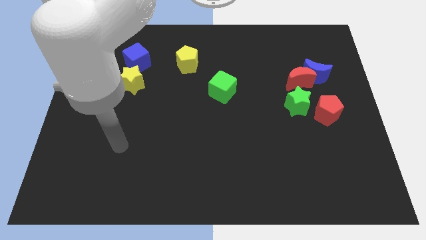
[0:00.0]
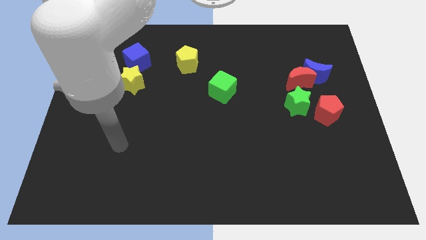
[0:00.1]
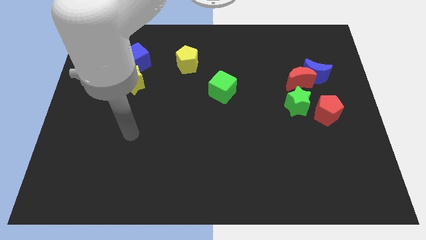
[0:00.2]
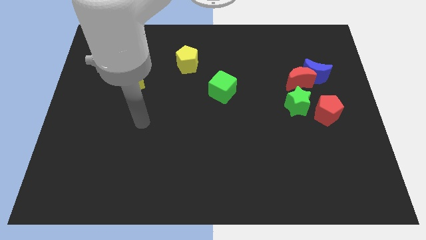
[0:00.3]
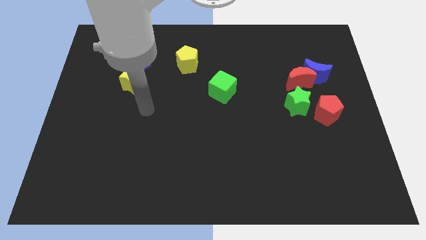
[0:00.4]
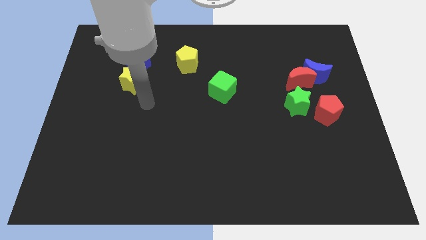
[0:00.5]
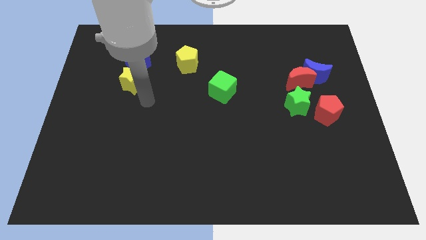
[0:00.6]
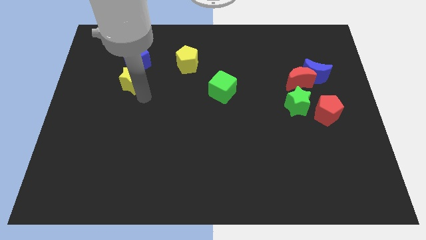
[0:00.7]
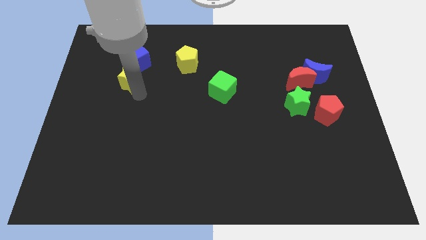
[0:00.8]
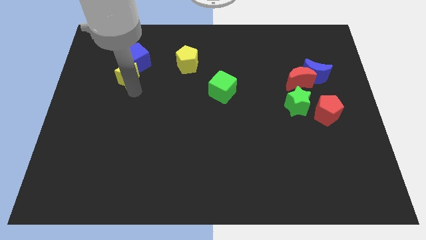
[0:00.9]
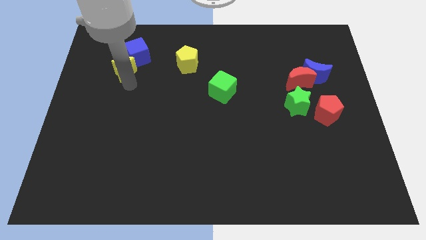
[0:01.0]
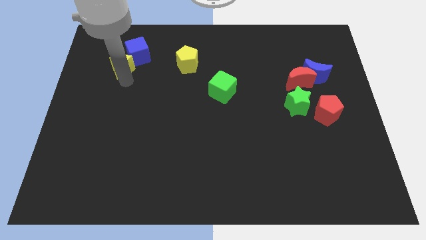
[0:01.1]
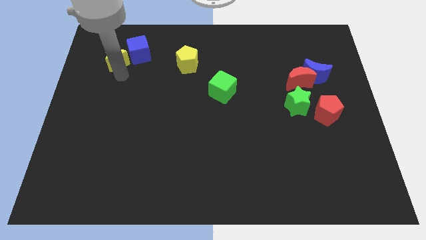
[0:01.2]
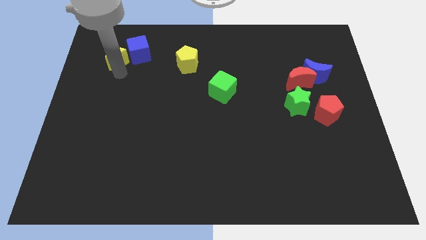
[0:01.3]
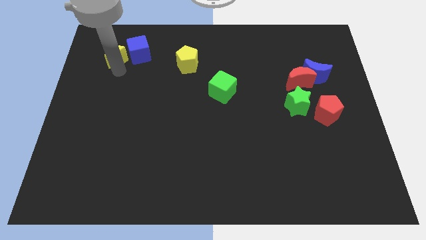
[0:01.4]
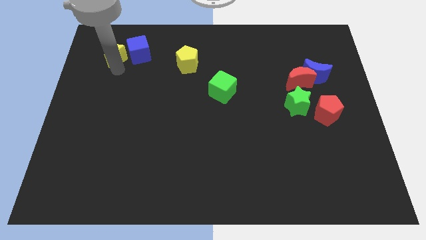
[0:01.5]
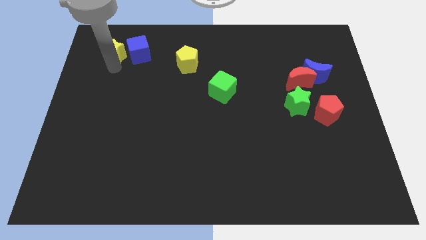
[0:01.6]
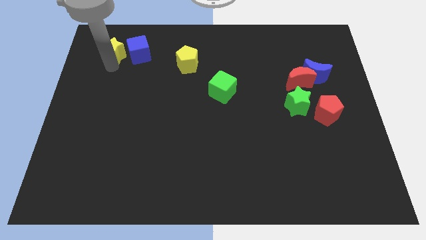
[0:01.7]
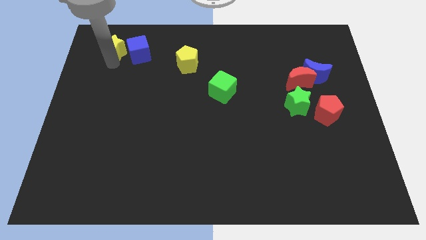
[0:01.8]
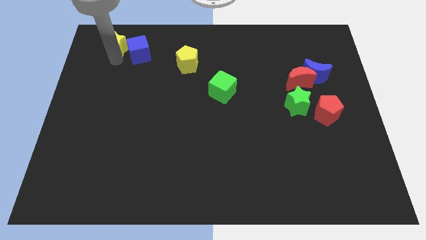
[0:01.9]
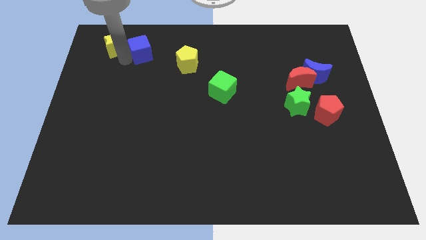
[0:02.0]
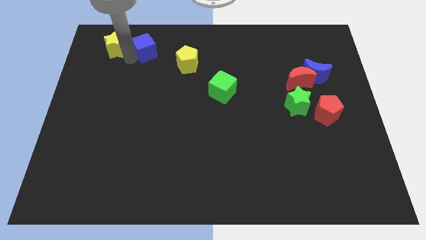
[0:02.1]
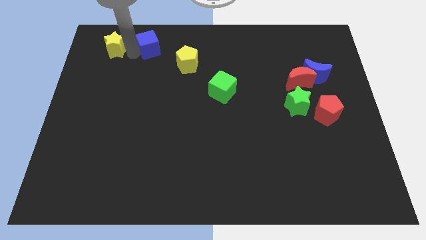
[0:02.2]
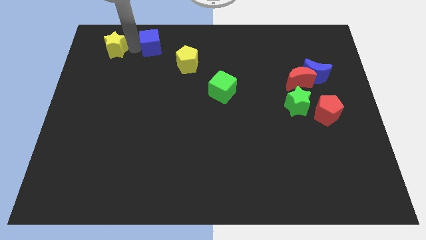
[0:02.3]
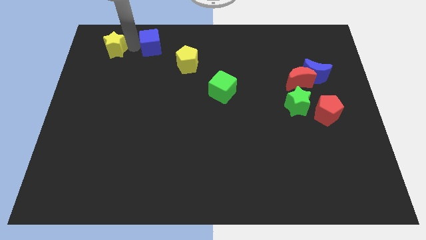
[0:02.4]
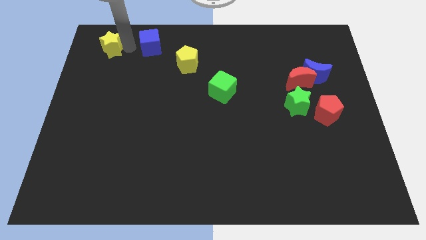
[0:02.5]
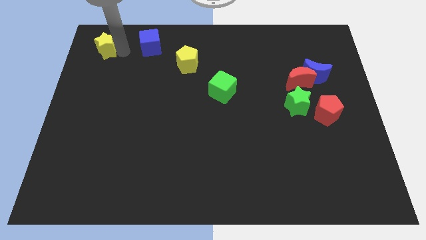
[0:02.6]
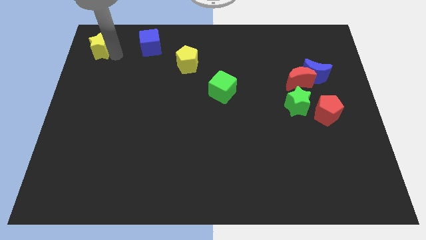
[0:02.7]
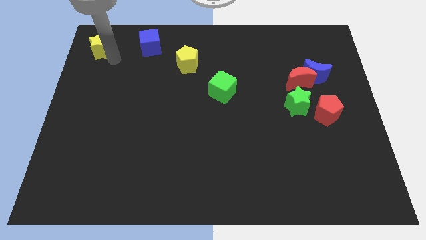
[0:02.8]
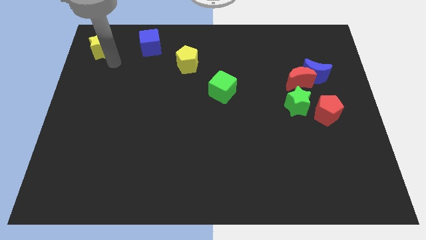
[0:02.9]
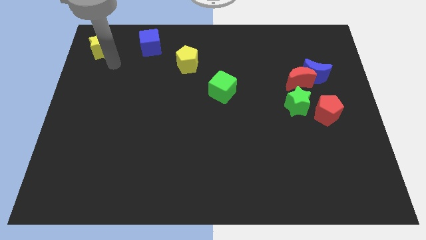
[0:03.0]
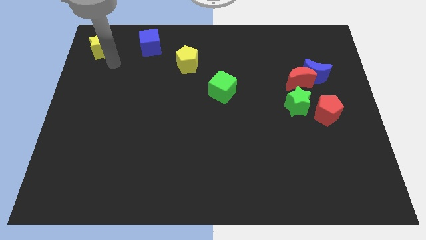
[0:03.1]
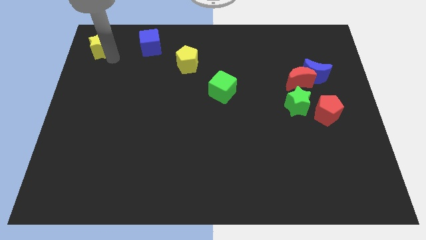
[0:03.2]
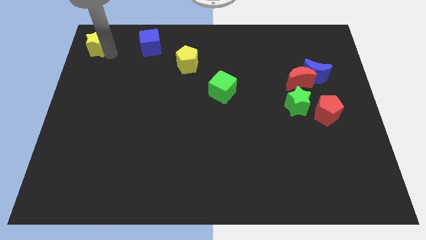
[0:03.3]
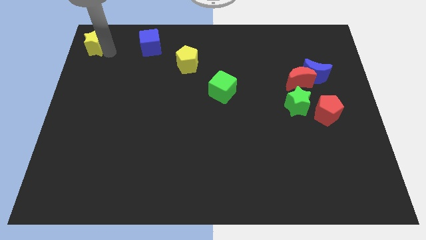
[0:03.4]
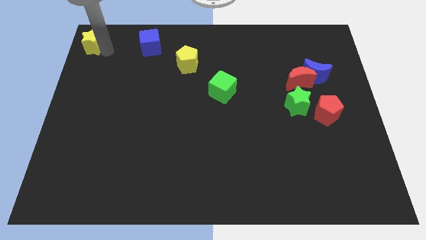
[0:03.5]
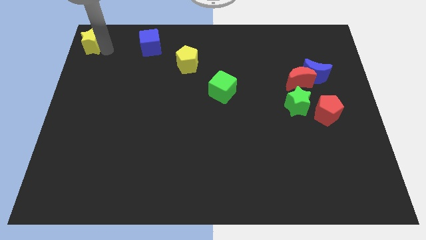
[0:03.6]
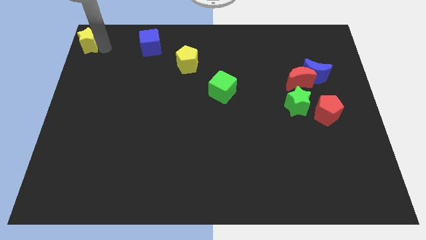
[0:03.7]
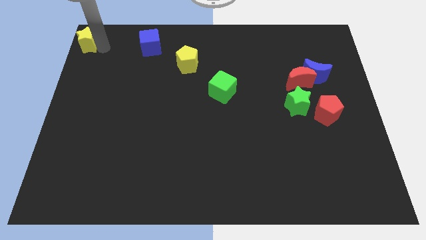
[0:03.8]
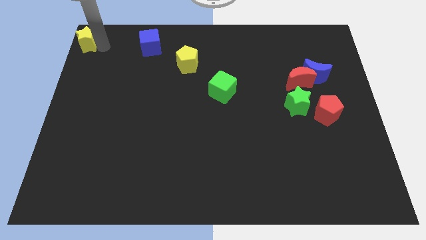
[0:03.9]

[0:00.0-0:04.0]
move yellow star to the left top corner

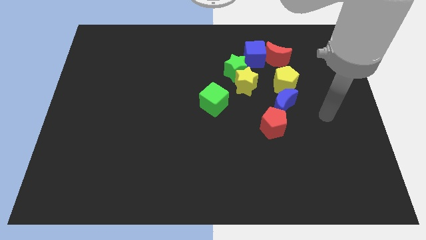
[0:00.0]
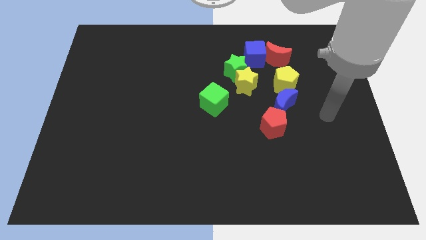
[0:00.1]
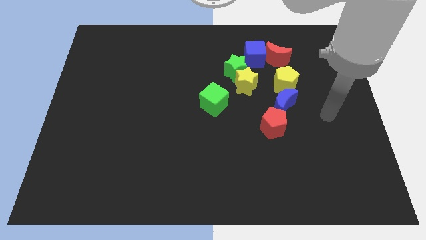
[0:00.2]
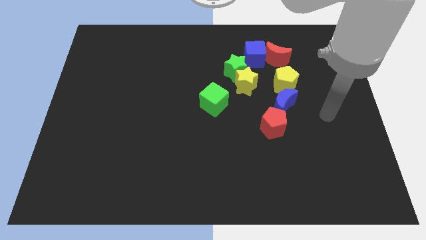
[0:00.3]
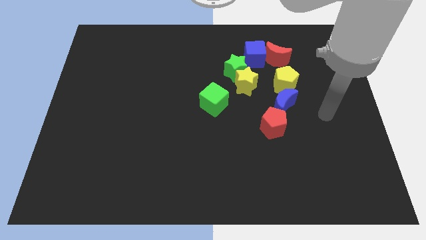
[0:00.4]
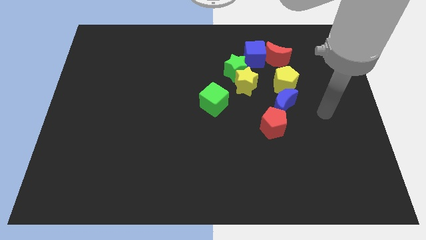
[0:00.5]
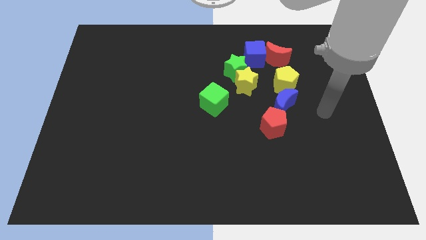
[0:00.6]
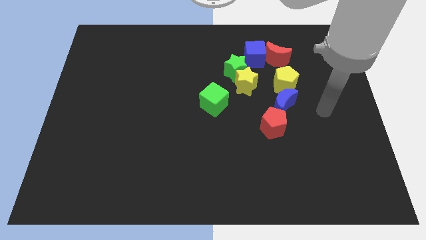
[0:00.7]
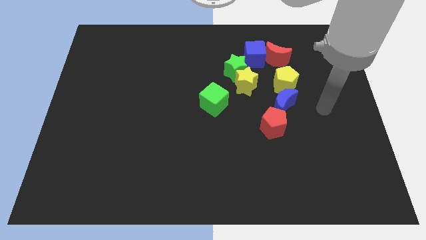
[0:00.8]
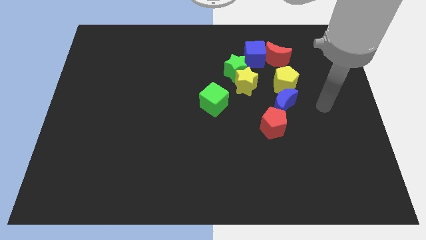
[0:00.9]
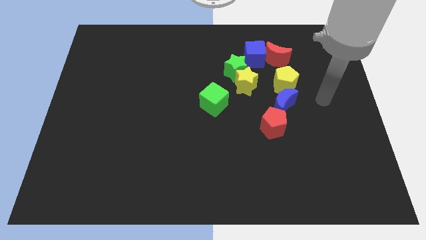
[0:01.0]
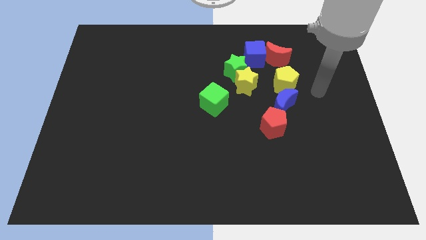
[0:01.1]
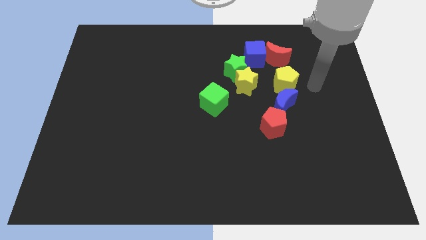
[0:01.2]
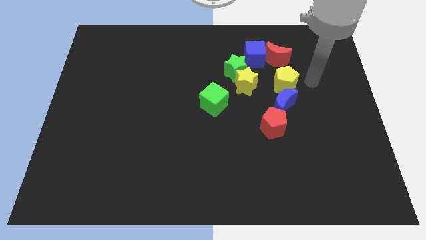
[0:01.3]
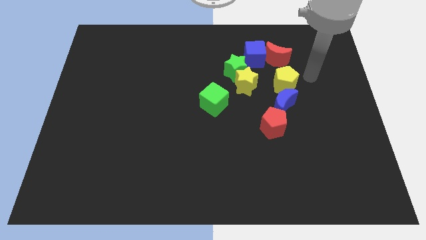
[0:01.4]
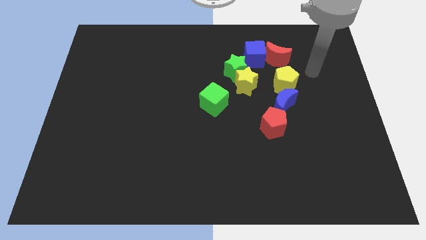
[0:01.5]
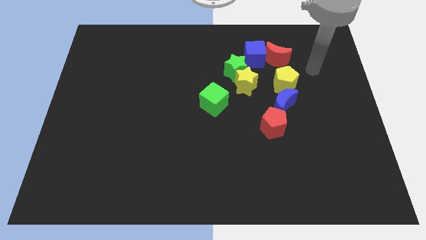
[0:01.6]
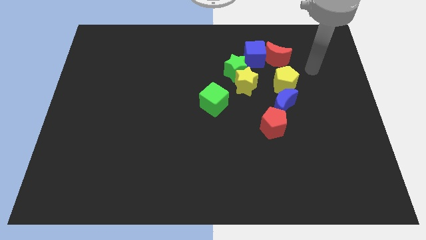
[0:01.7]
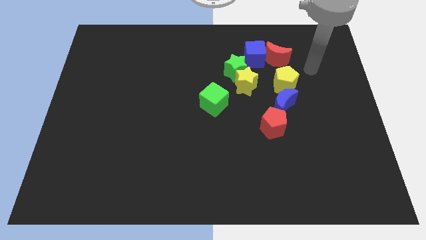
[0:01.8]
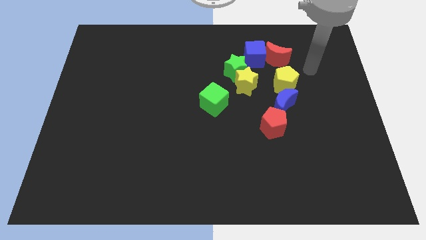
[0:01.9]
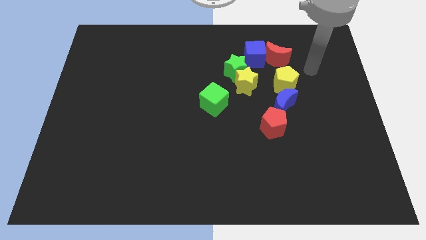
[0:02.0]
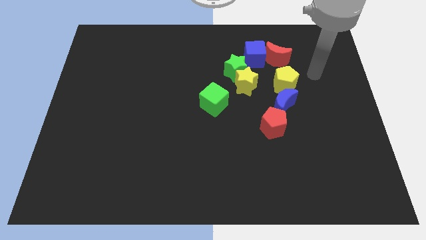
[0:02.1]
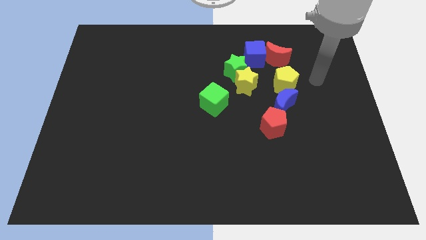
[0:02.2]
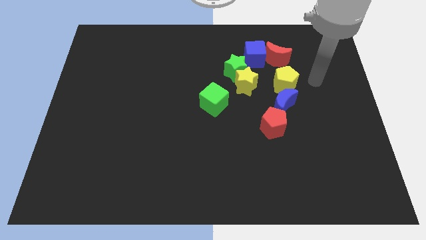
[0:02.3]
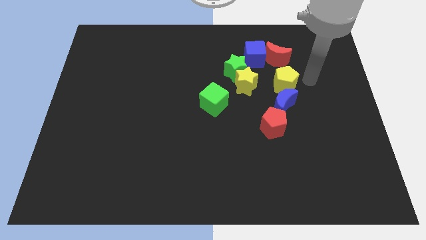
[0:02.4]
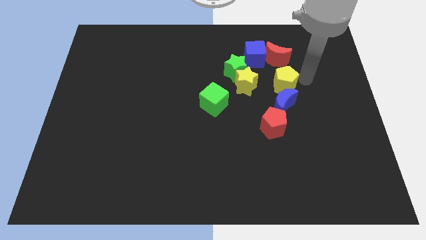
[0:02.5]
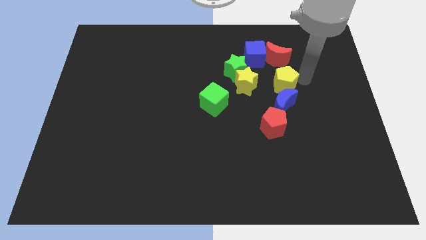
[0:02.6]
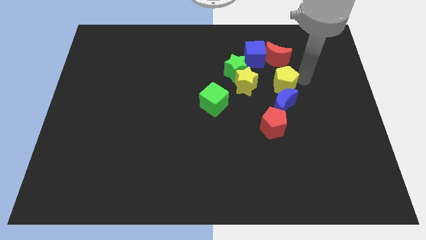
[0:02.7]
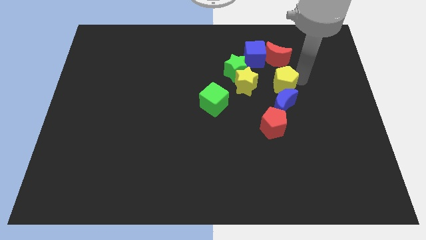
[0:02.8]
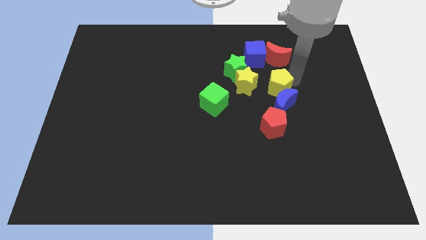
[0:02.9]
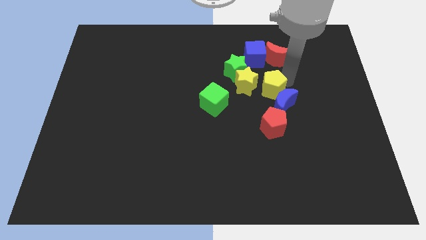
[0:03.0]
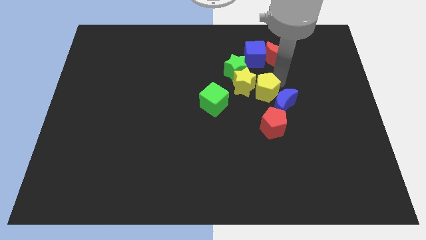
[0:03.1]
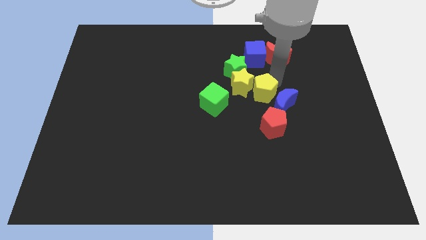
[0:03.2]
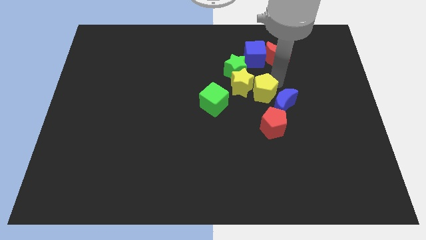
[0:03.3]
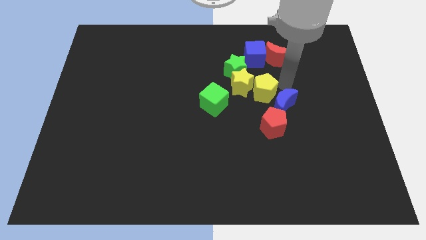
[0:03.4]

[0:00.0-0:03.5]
move the yellow pentagon to the right of the yellow star

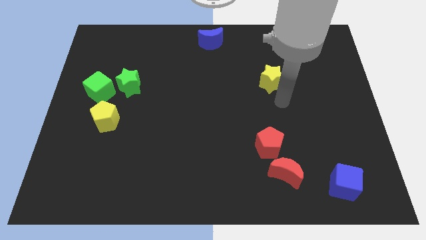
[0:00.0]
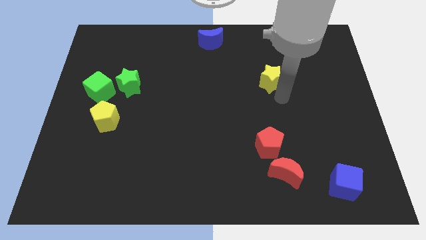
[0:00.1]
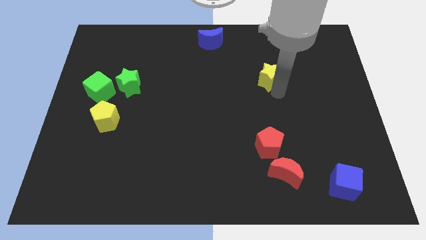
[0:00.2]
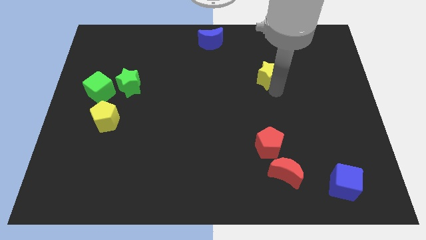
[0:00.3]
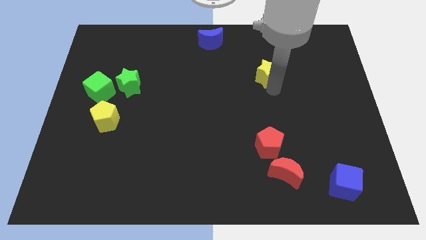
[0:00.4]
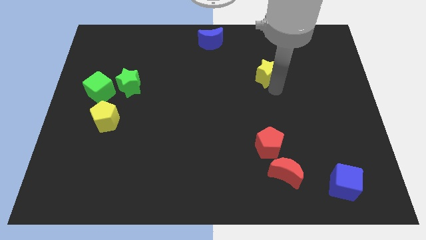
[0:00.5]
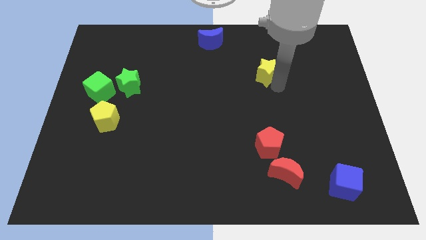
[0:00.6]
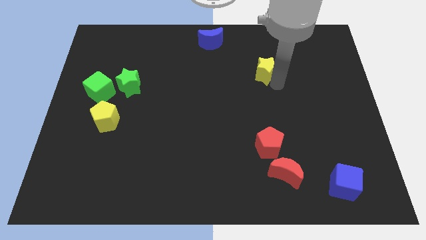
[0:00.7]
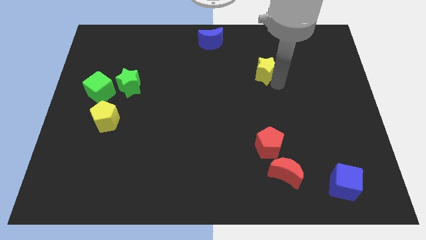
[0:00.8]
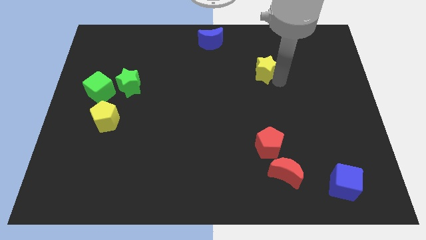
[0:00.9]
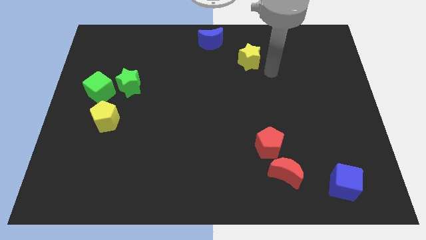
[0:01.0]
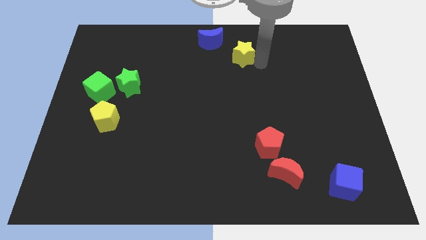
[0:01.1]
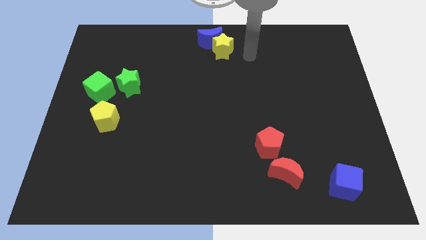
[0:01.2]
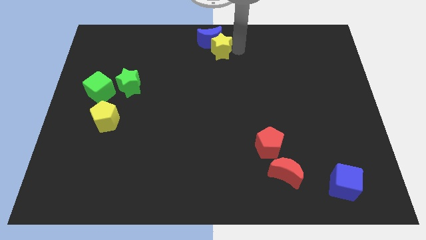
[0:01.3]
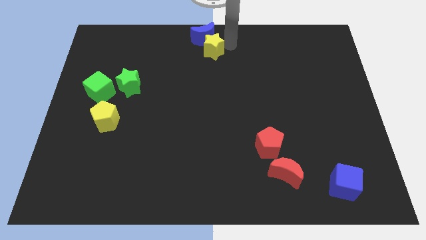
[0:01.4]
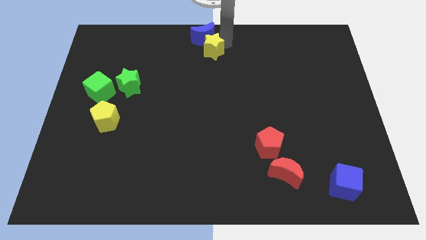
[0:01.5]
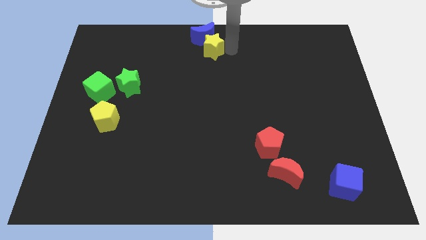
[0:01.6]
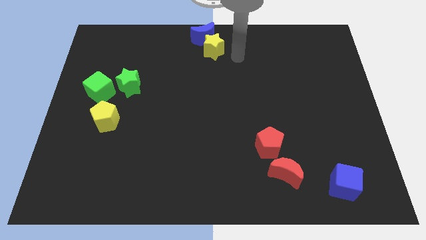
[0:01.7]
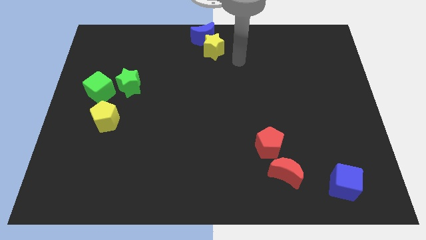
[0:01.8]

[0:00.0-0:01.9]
push the yellow star into blue moon
